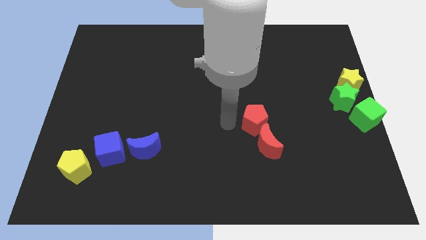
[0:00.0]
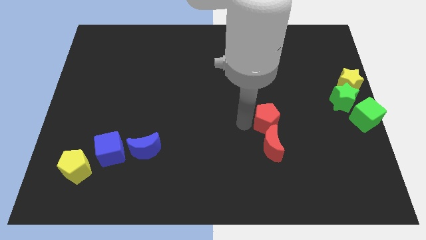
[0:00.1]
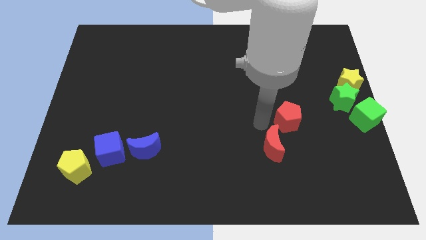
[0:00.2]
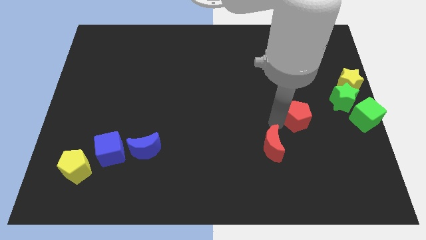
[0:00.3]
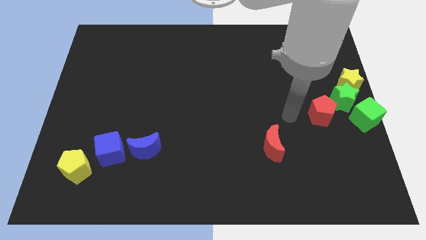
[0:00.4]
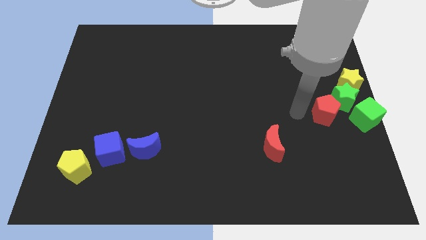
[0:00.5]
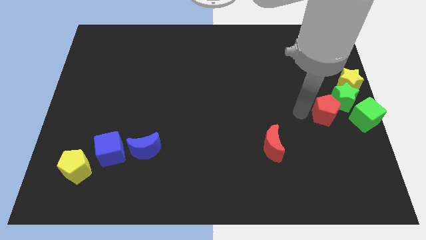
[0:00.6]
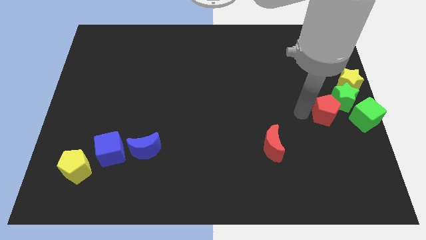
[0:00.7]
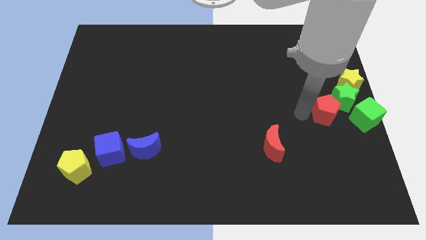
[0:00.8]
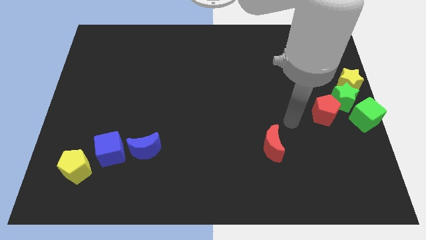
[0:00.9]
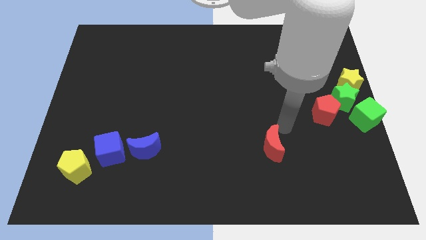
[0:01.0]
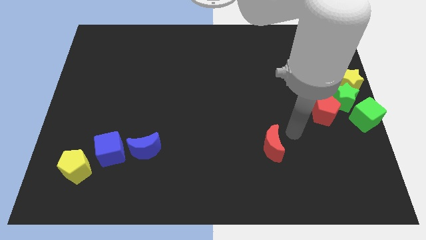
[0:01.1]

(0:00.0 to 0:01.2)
push the red pentagon to the diagonally of the red crescent

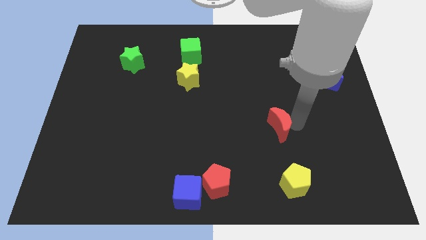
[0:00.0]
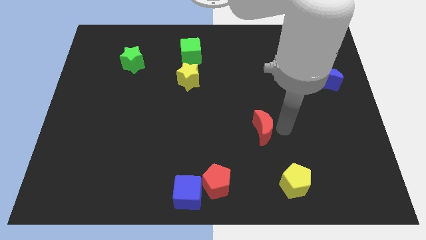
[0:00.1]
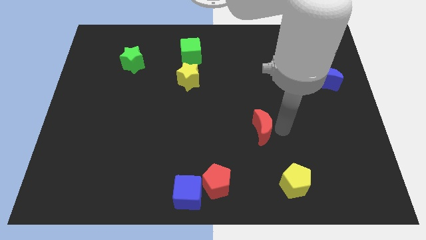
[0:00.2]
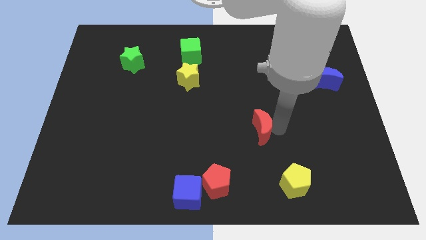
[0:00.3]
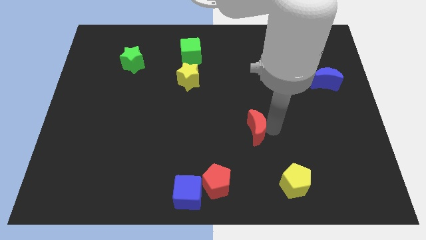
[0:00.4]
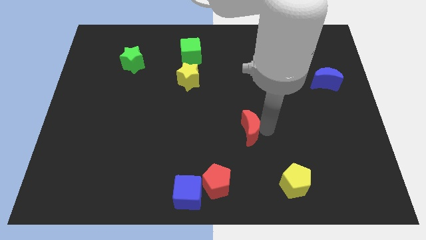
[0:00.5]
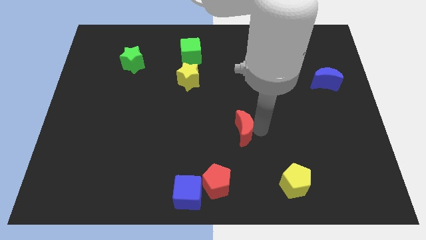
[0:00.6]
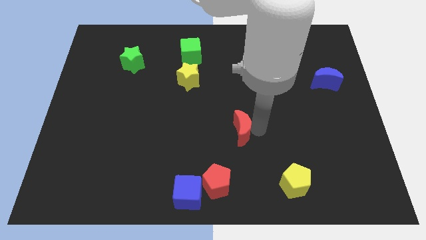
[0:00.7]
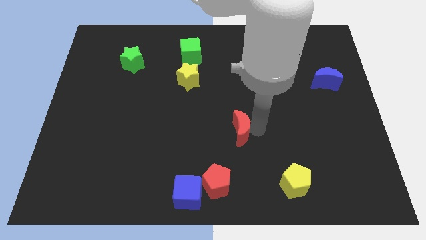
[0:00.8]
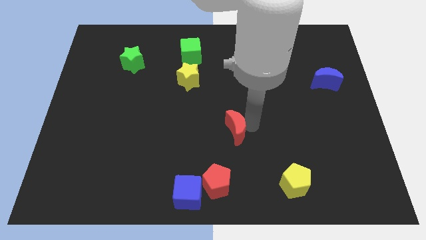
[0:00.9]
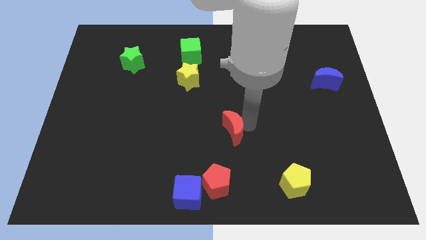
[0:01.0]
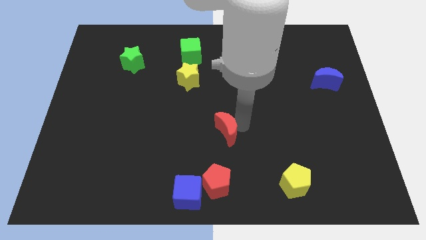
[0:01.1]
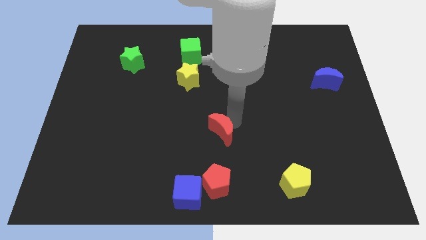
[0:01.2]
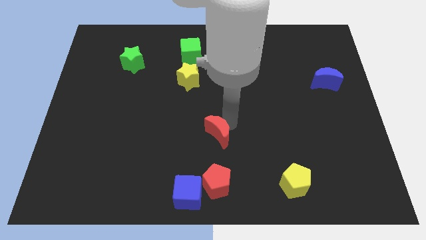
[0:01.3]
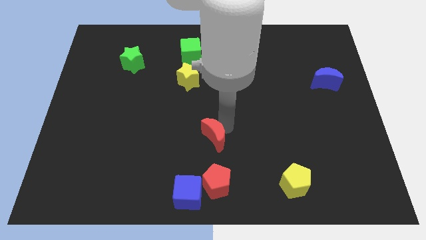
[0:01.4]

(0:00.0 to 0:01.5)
move the red crescent to the top of the red pentagon

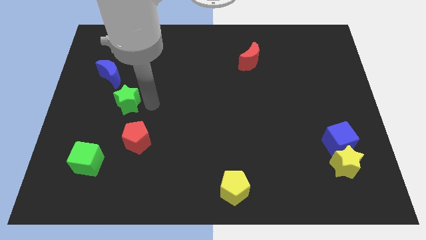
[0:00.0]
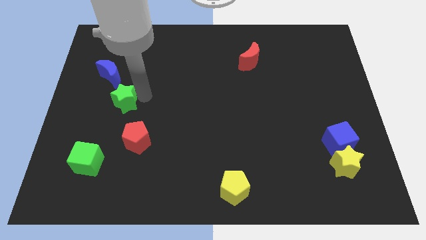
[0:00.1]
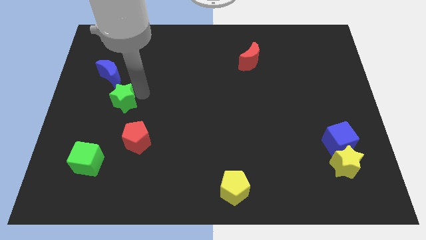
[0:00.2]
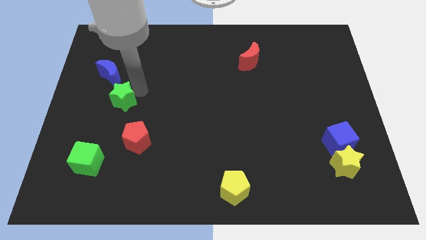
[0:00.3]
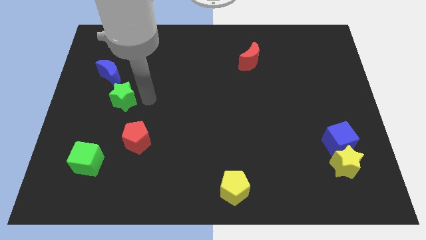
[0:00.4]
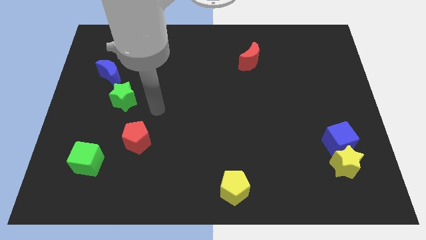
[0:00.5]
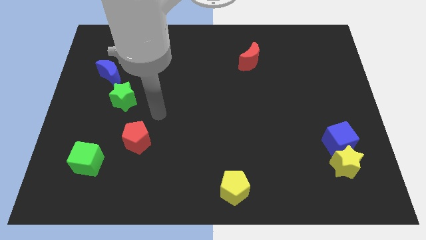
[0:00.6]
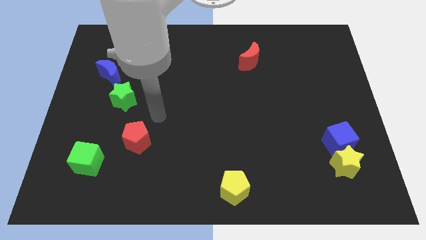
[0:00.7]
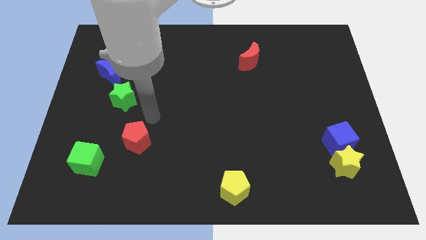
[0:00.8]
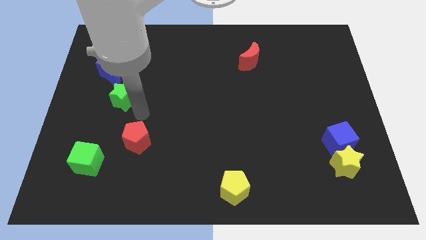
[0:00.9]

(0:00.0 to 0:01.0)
push the green star close to the blue crescent

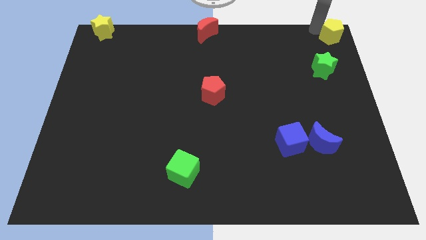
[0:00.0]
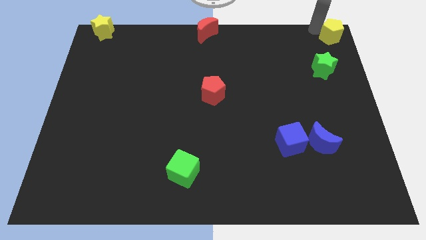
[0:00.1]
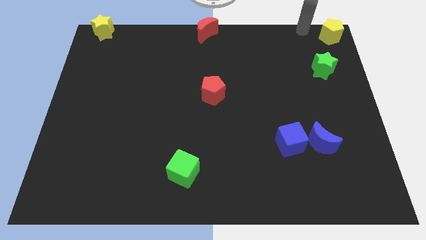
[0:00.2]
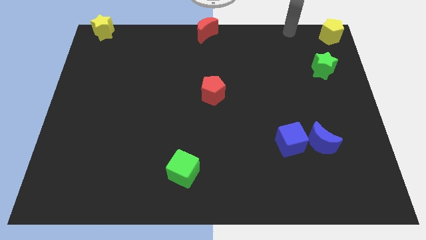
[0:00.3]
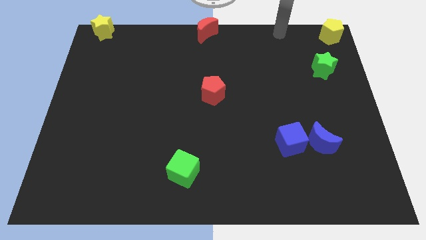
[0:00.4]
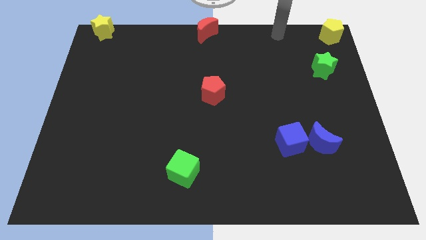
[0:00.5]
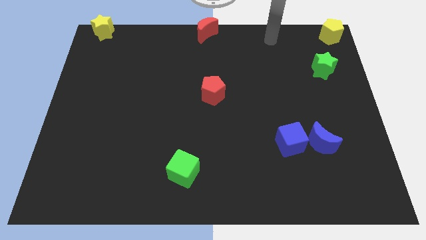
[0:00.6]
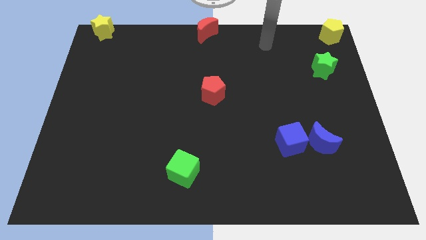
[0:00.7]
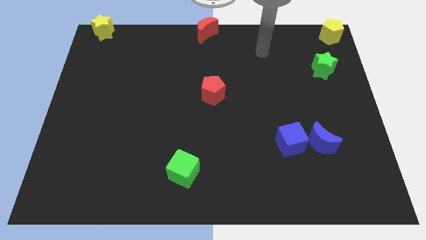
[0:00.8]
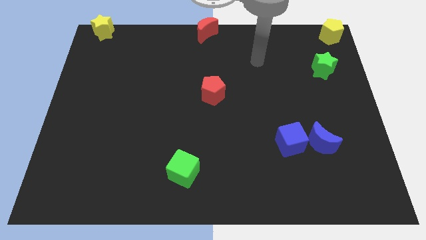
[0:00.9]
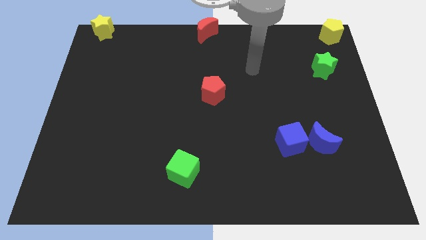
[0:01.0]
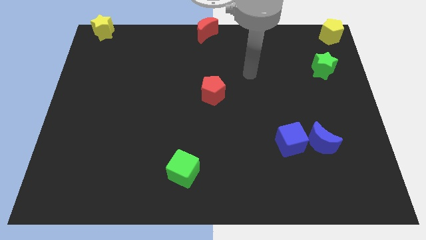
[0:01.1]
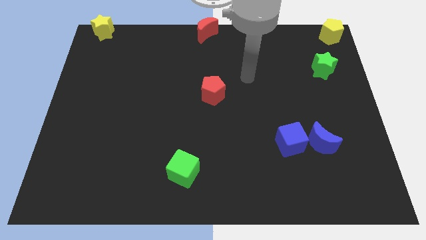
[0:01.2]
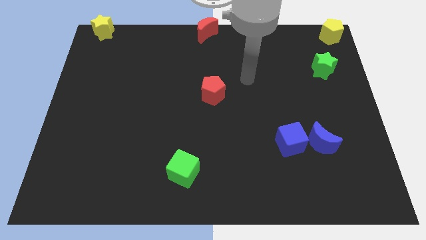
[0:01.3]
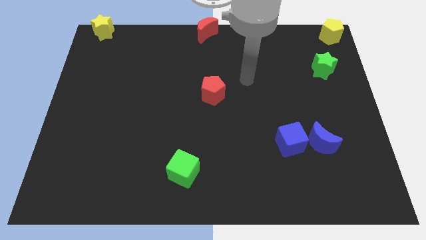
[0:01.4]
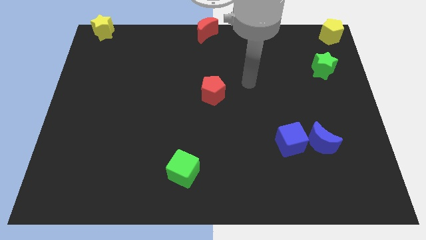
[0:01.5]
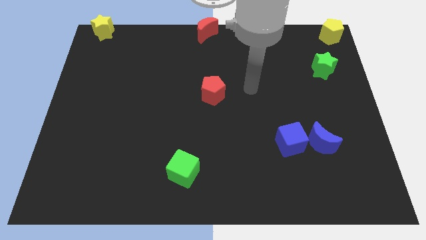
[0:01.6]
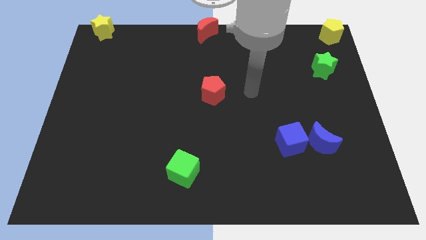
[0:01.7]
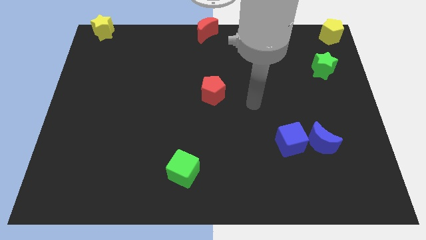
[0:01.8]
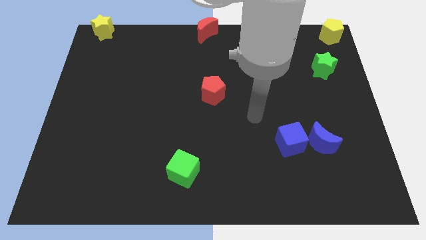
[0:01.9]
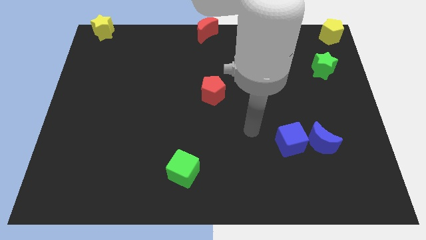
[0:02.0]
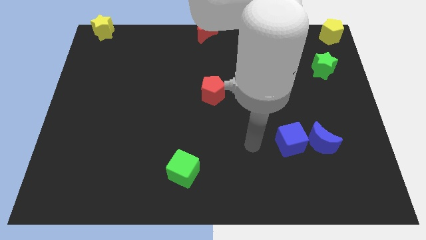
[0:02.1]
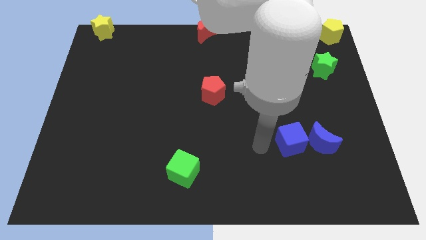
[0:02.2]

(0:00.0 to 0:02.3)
point the arm to the left of the blue cube

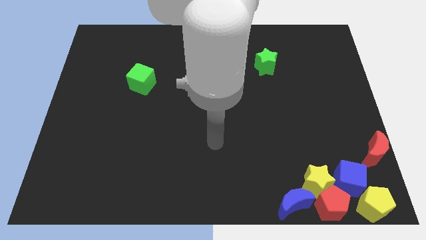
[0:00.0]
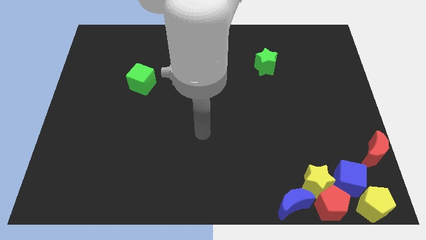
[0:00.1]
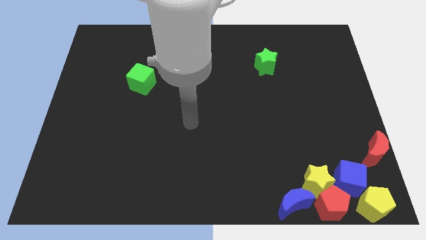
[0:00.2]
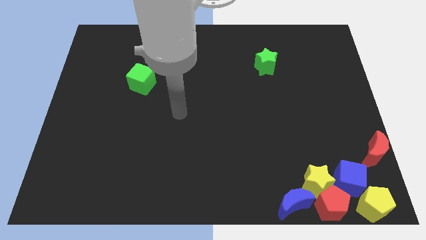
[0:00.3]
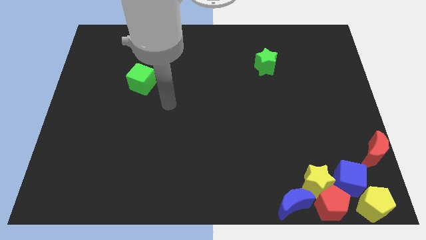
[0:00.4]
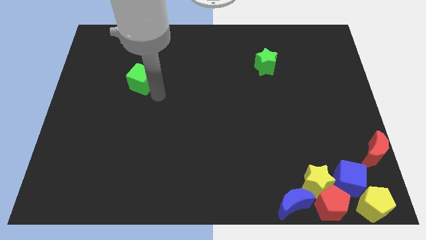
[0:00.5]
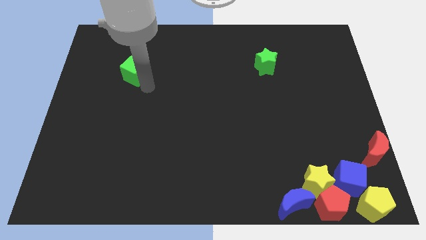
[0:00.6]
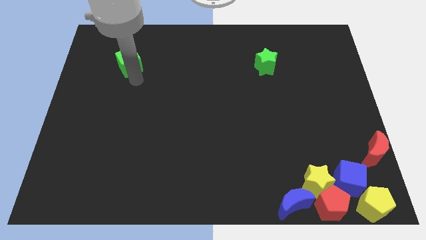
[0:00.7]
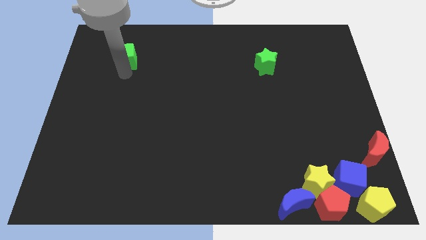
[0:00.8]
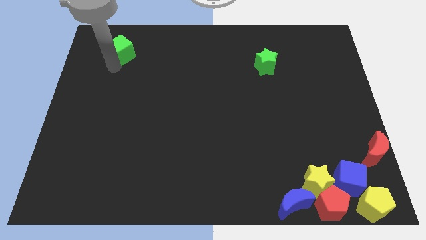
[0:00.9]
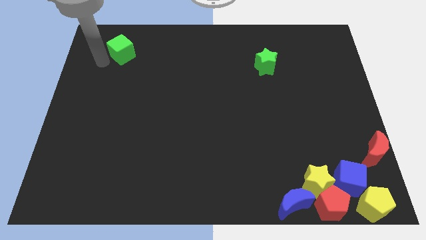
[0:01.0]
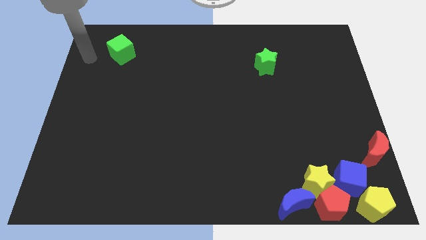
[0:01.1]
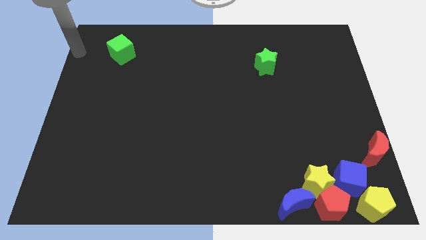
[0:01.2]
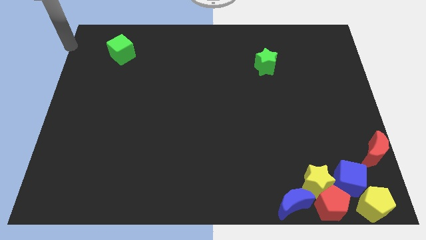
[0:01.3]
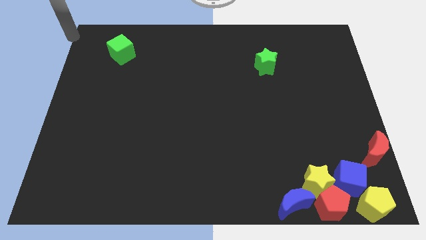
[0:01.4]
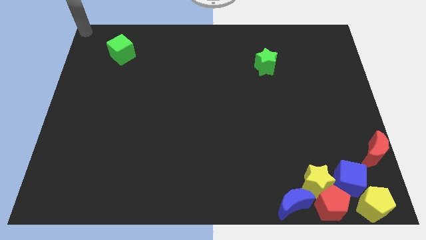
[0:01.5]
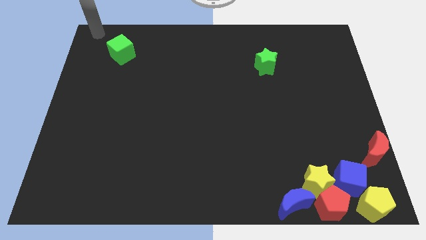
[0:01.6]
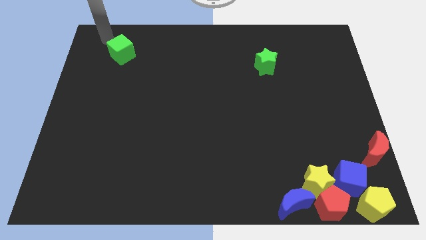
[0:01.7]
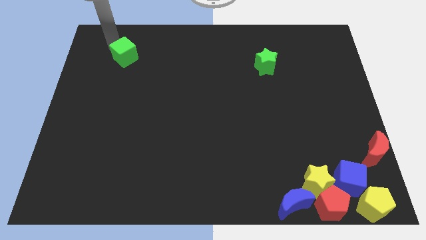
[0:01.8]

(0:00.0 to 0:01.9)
place your arm at the left top of the green cube

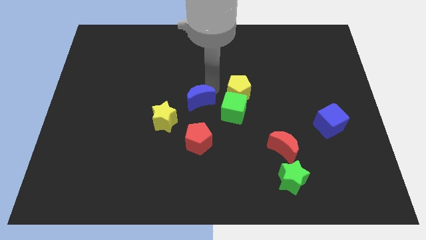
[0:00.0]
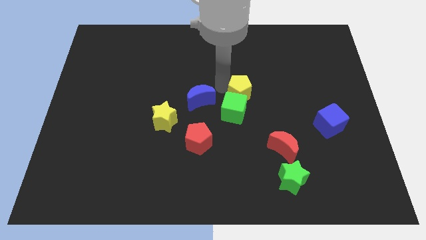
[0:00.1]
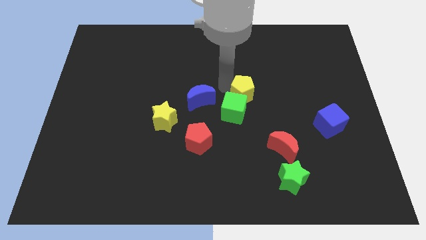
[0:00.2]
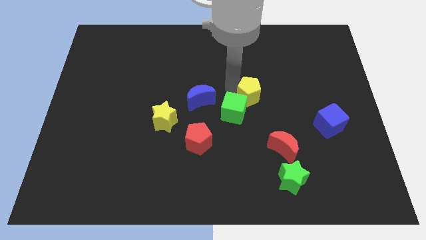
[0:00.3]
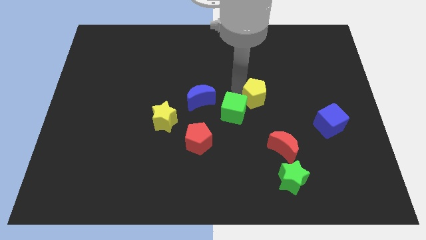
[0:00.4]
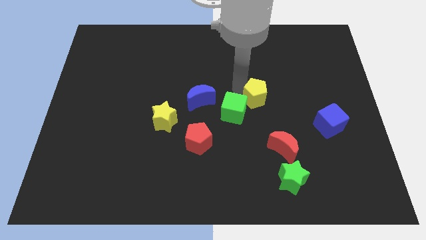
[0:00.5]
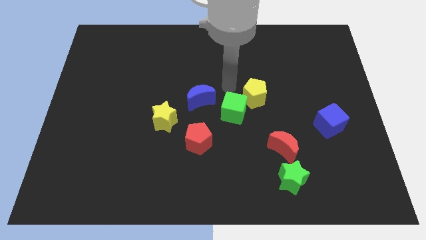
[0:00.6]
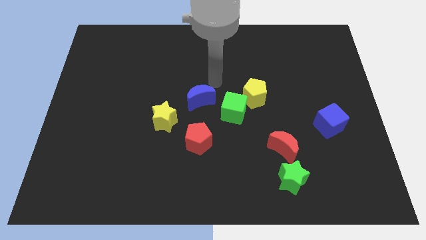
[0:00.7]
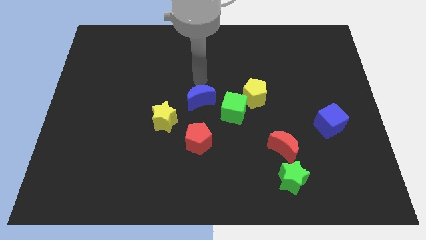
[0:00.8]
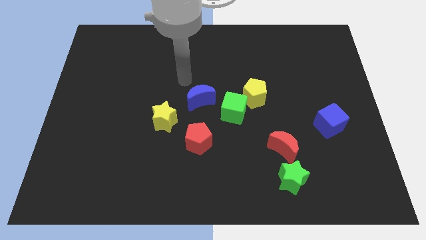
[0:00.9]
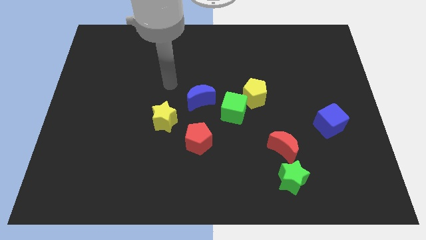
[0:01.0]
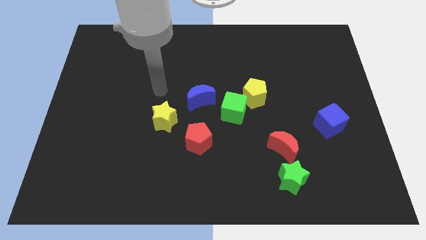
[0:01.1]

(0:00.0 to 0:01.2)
adjust the yellow pentagon diagonally top right to the green cube
